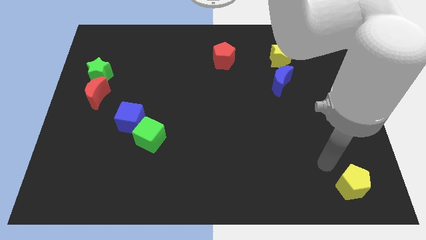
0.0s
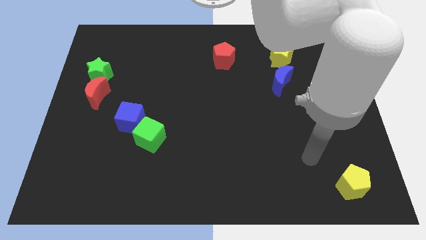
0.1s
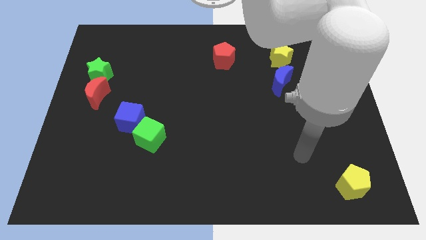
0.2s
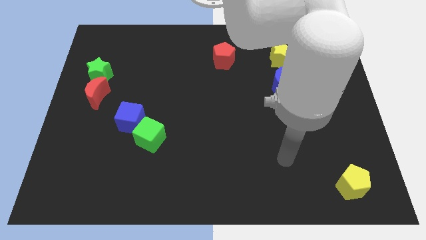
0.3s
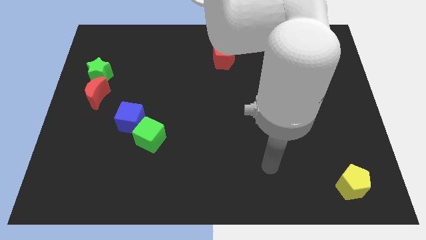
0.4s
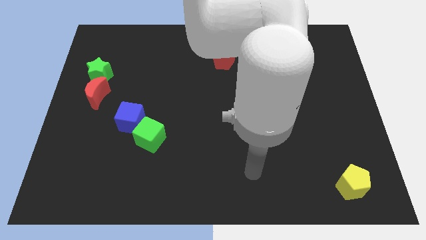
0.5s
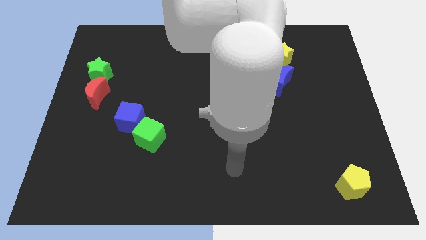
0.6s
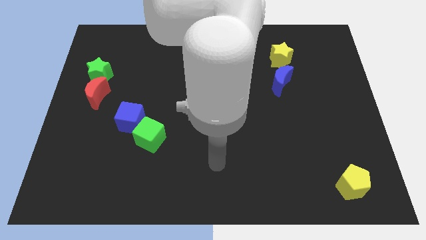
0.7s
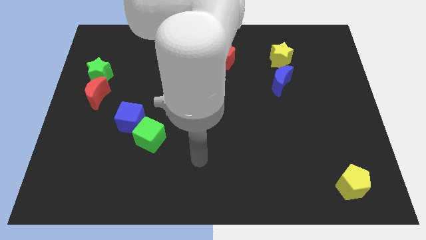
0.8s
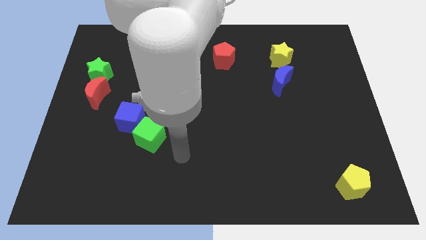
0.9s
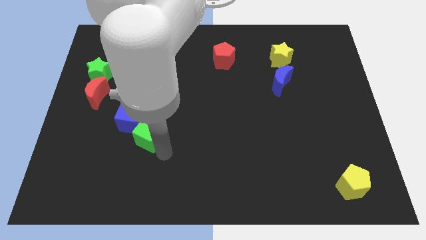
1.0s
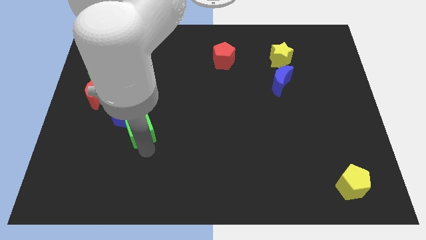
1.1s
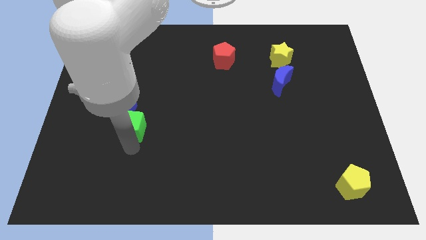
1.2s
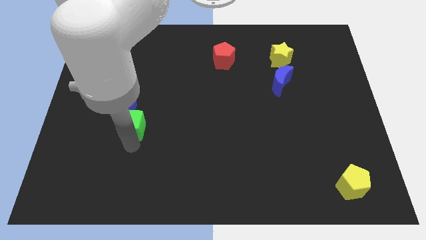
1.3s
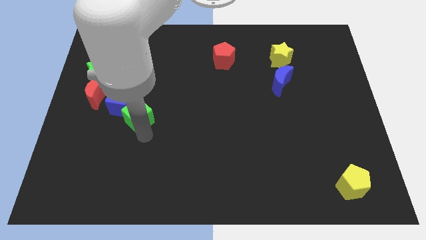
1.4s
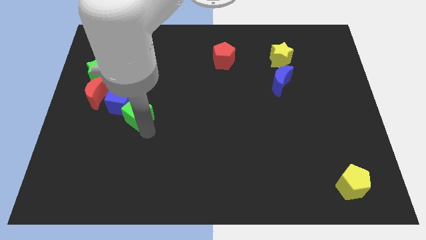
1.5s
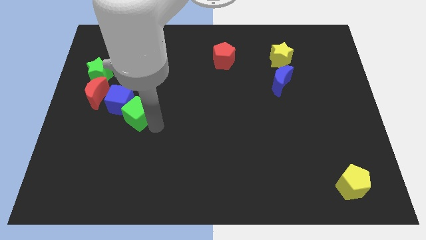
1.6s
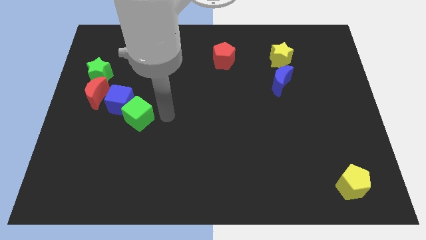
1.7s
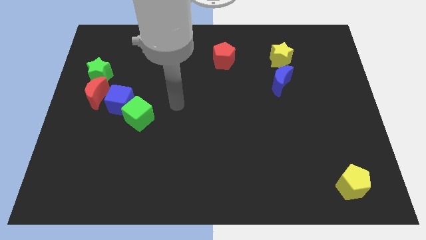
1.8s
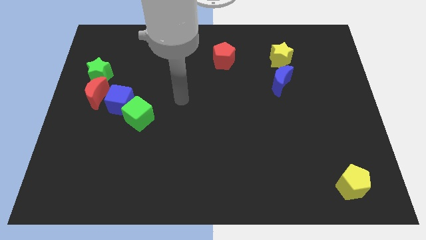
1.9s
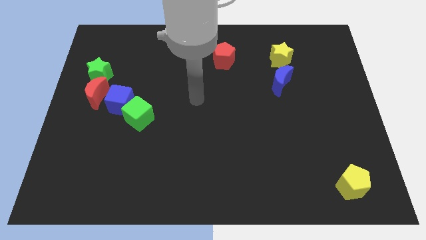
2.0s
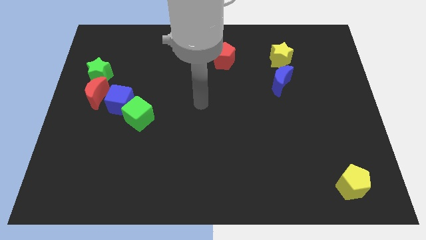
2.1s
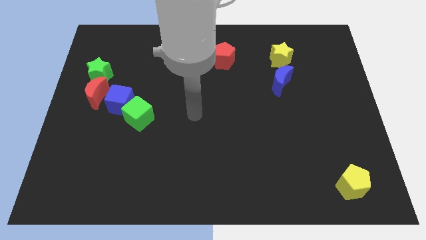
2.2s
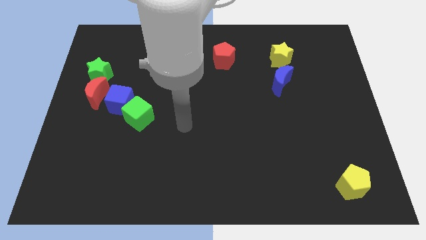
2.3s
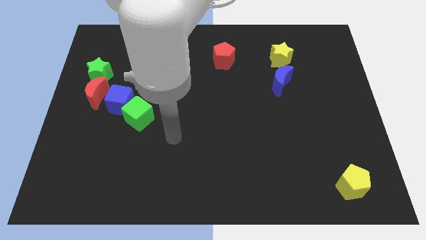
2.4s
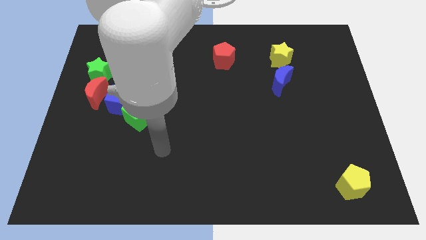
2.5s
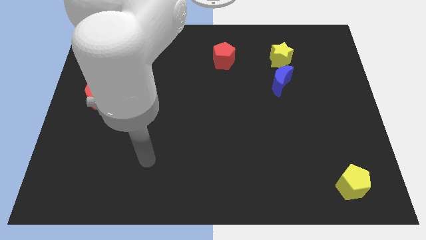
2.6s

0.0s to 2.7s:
push the green cube into the blue cube

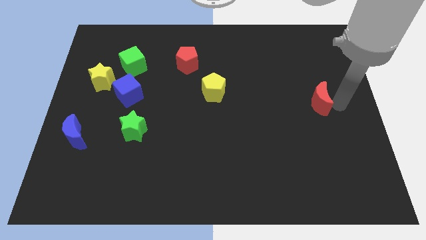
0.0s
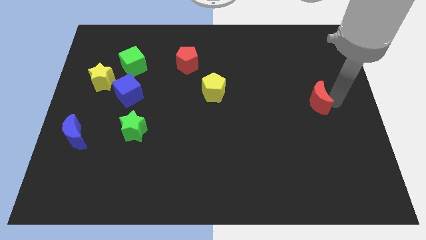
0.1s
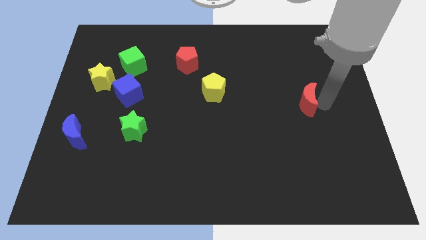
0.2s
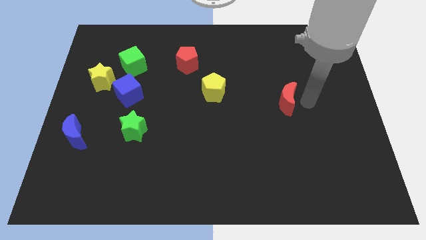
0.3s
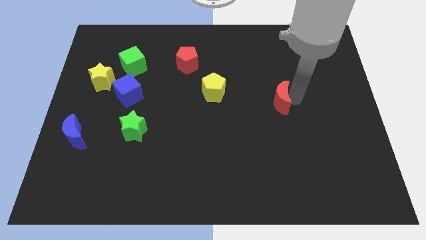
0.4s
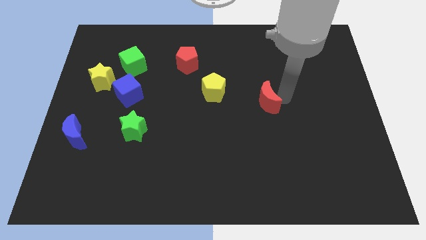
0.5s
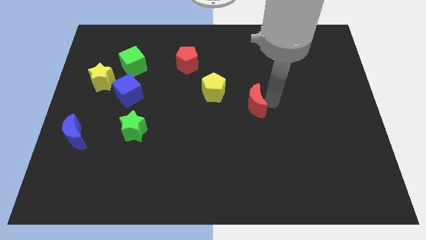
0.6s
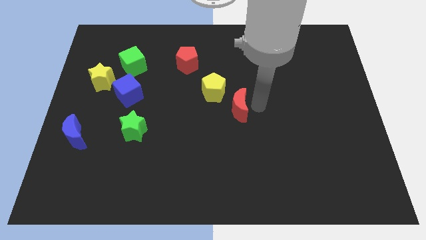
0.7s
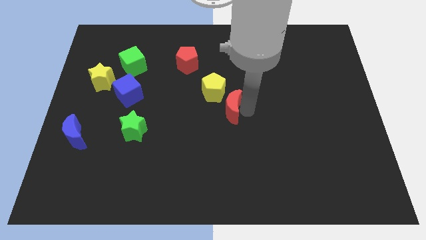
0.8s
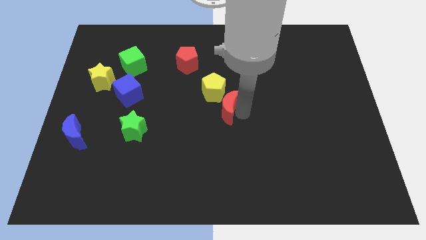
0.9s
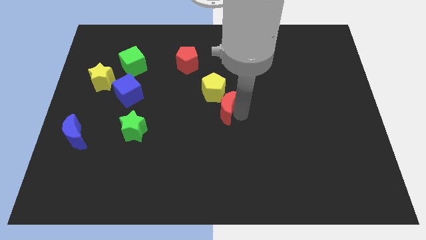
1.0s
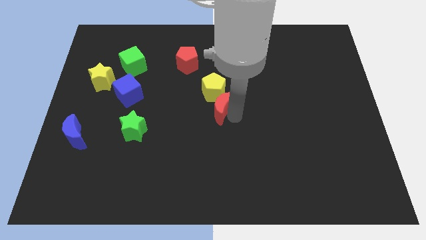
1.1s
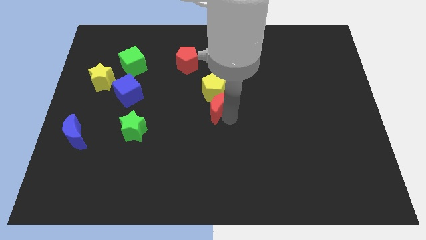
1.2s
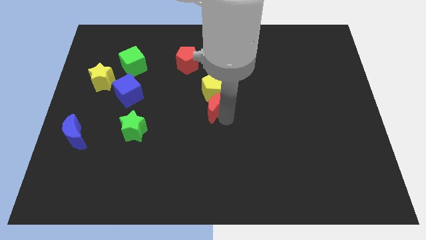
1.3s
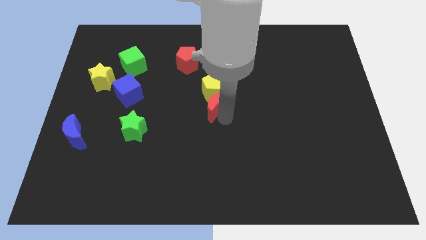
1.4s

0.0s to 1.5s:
move the red crescent to the bottom of the yellow pentagon

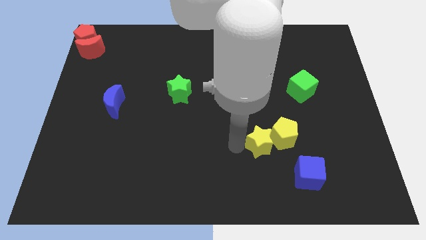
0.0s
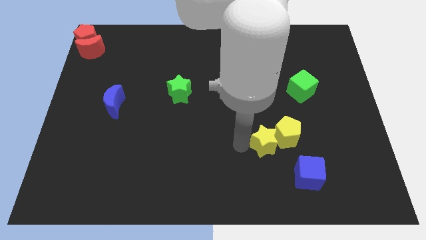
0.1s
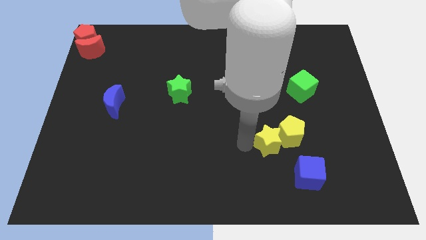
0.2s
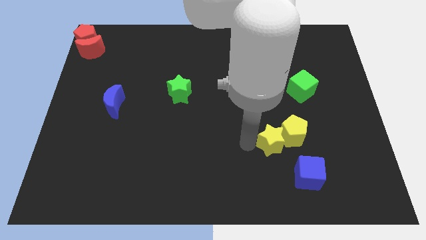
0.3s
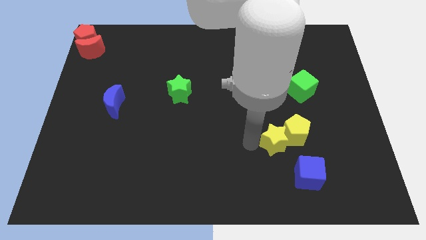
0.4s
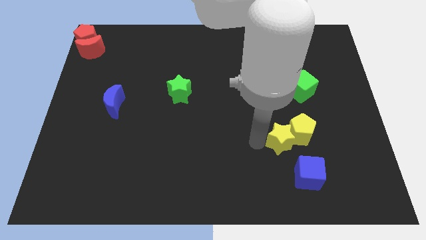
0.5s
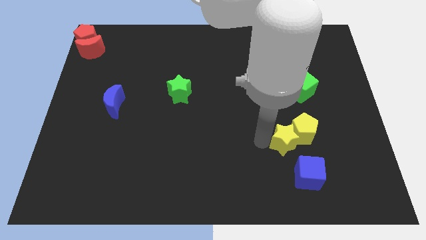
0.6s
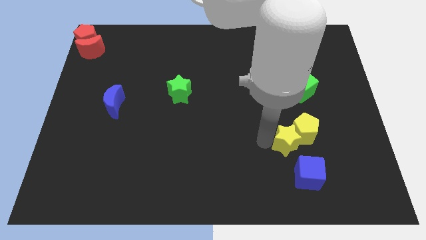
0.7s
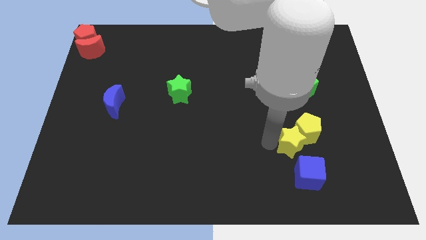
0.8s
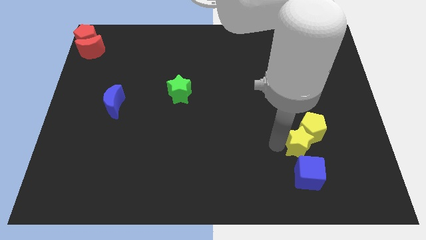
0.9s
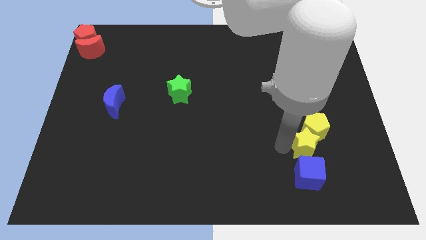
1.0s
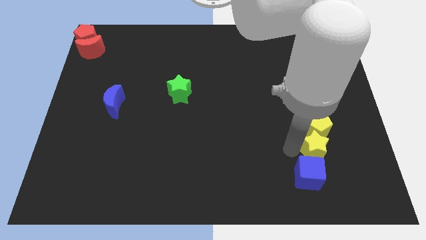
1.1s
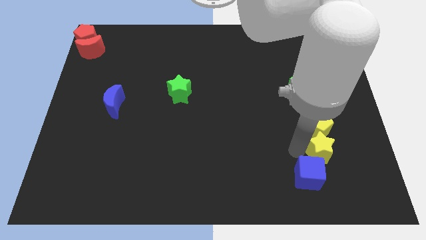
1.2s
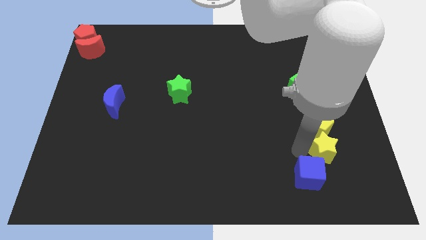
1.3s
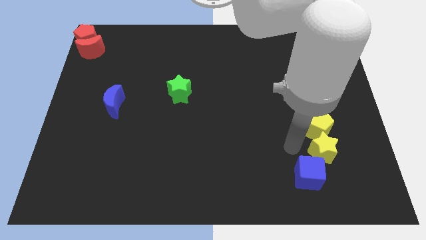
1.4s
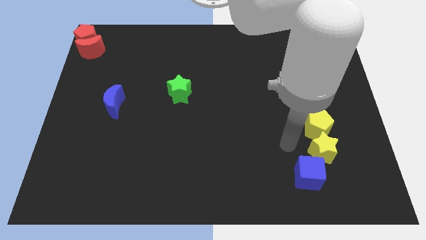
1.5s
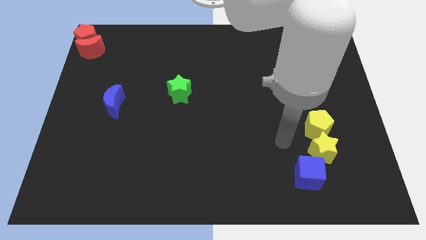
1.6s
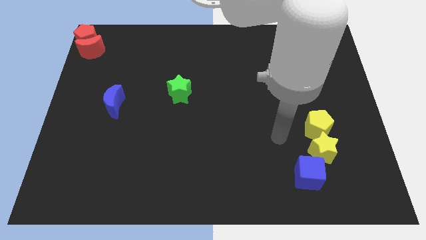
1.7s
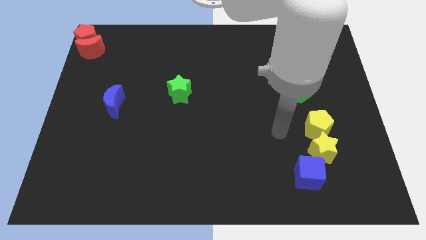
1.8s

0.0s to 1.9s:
place the yellow pentagon and yellow star above the blue cube

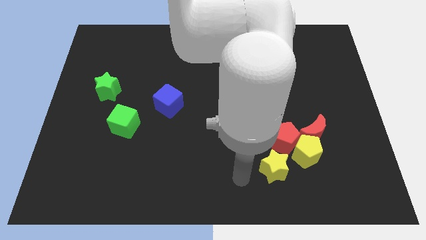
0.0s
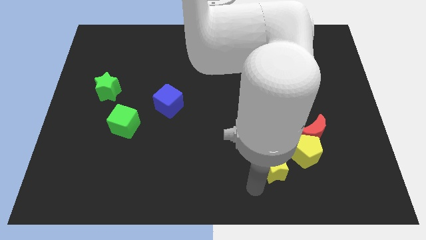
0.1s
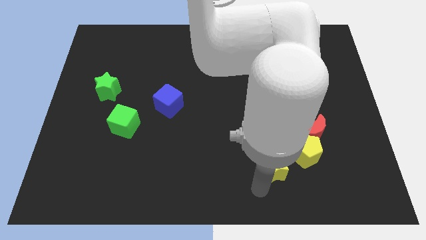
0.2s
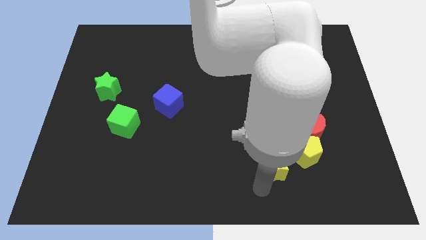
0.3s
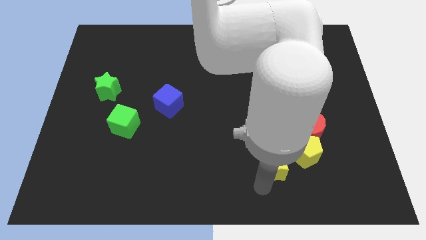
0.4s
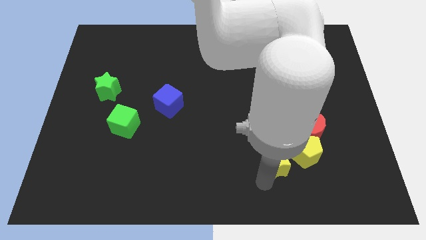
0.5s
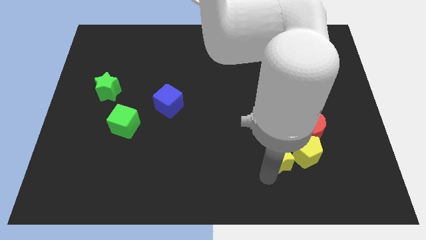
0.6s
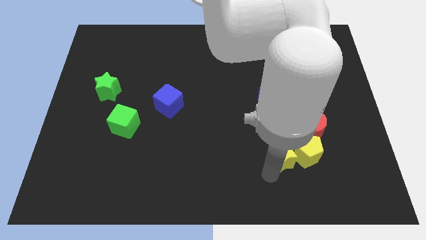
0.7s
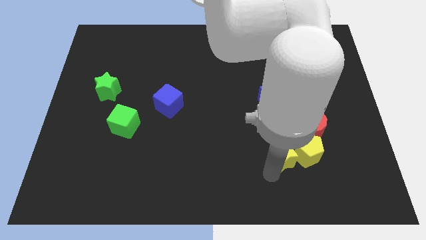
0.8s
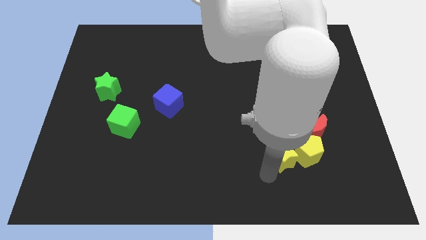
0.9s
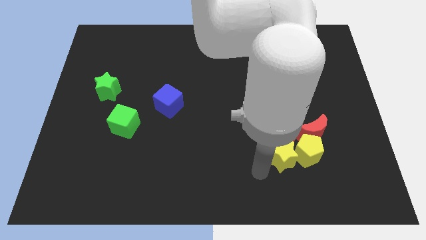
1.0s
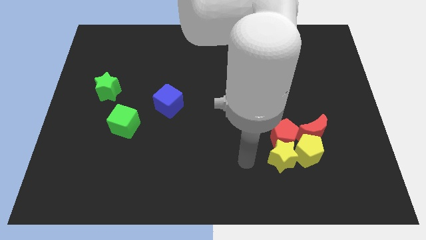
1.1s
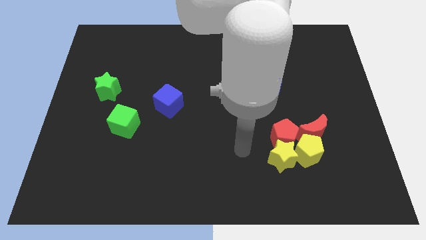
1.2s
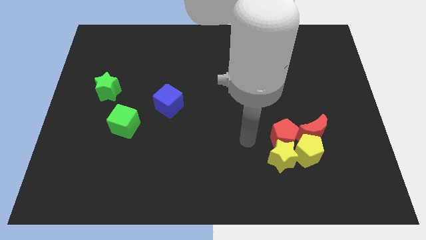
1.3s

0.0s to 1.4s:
push the yellow star into the group of blocks

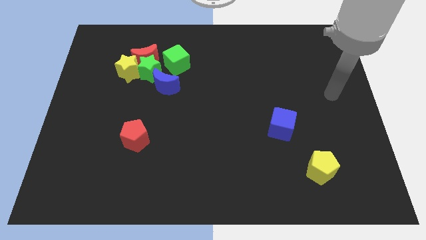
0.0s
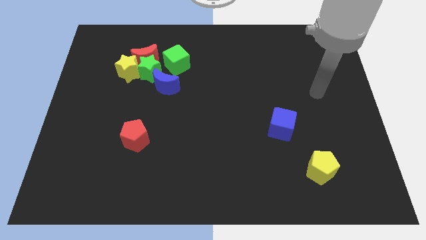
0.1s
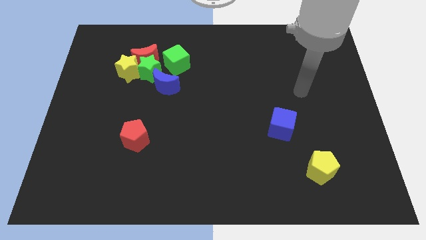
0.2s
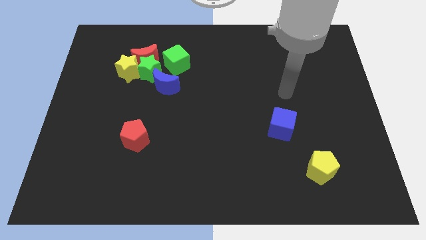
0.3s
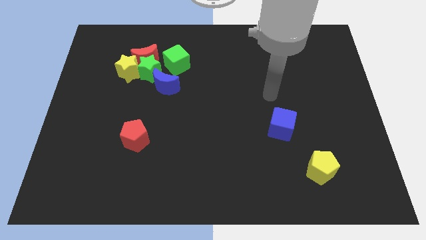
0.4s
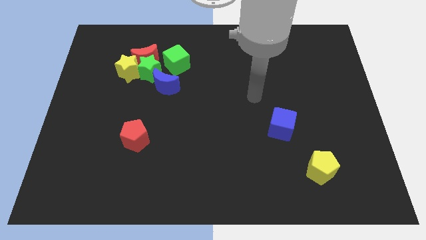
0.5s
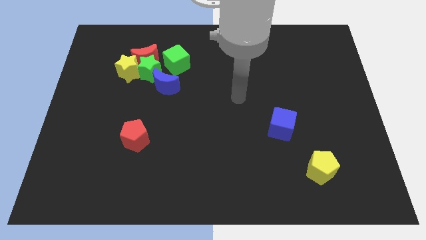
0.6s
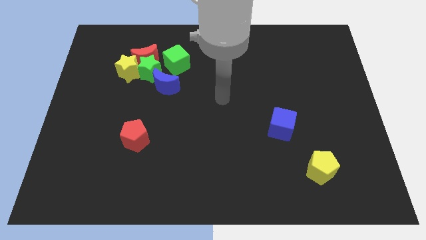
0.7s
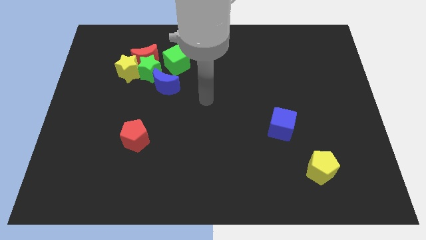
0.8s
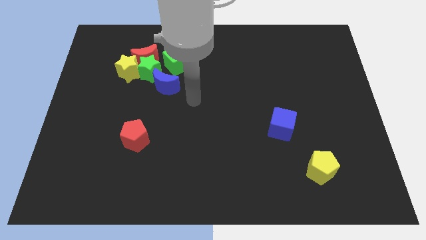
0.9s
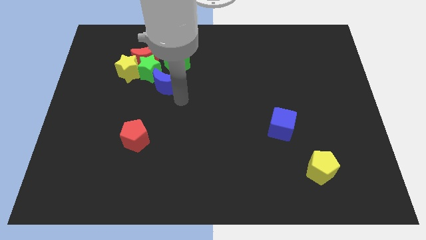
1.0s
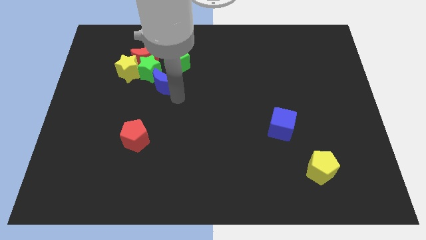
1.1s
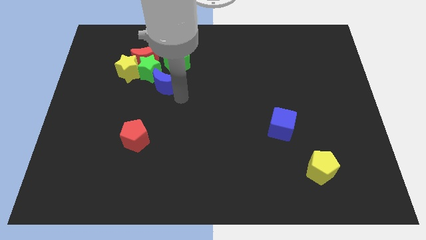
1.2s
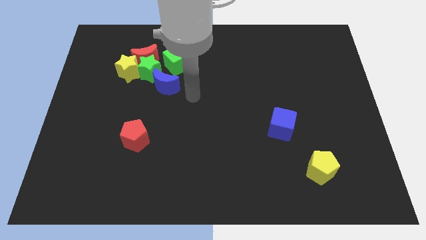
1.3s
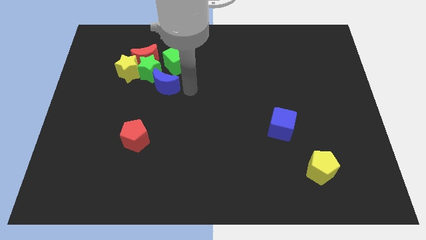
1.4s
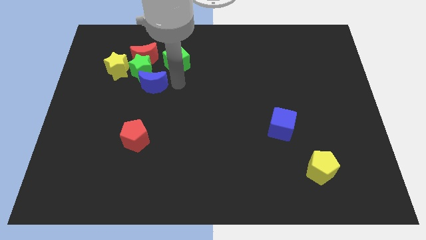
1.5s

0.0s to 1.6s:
move the blue crescent slightly left
